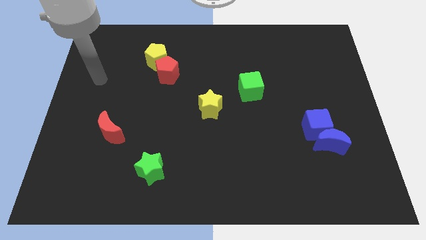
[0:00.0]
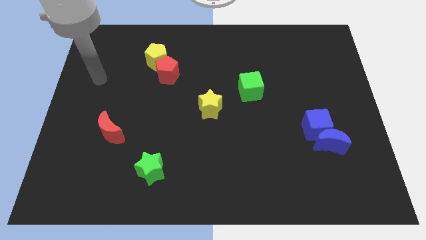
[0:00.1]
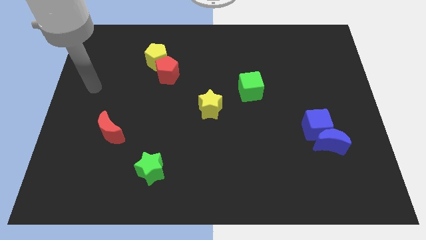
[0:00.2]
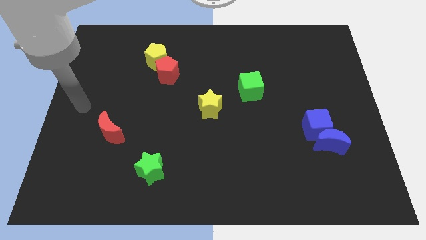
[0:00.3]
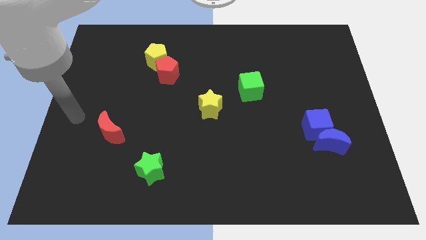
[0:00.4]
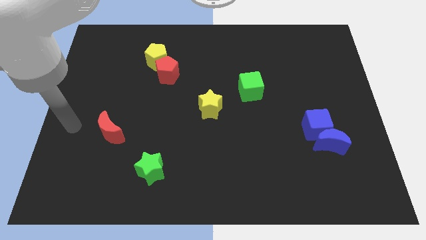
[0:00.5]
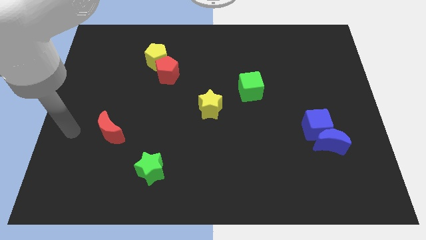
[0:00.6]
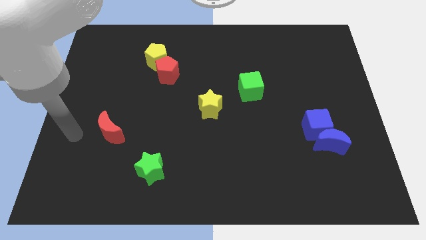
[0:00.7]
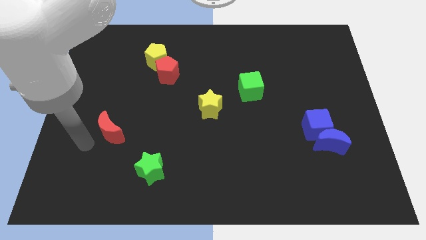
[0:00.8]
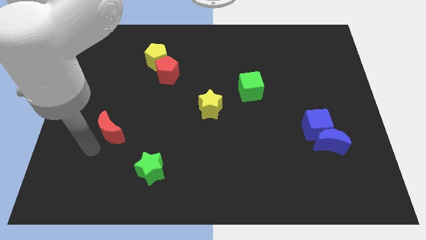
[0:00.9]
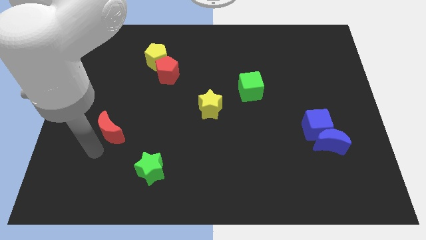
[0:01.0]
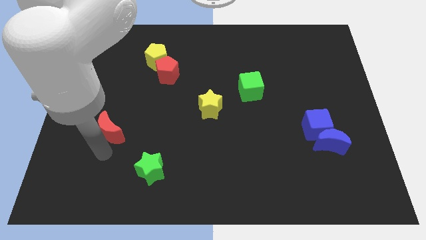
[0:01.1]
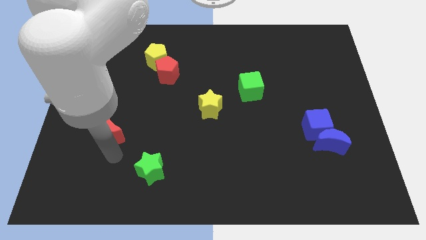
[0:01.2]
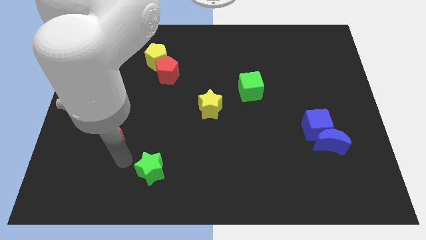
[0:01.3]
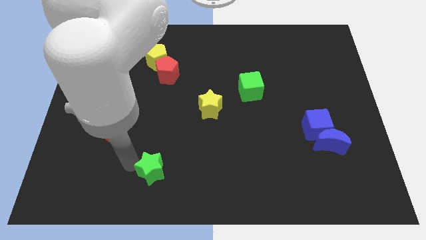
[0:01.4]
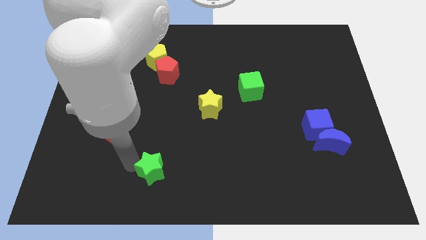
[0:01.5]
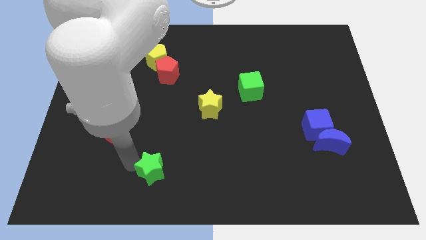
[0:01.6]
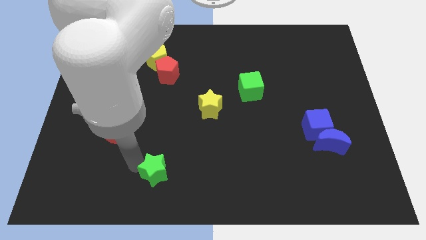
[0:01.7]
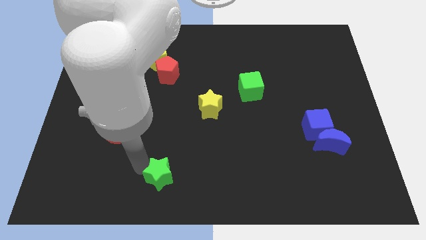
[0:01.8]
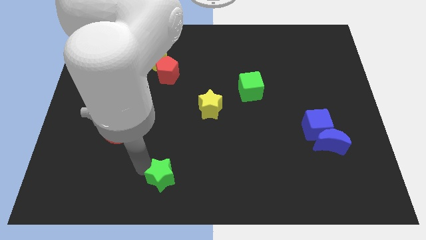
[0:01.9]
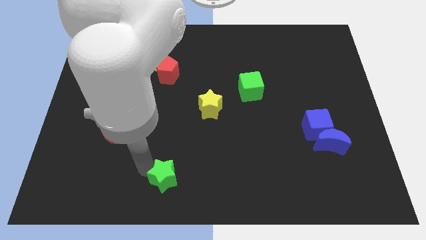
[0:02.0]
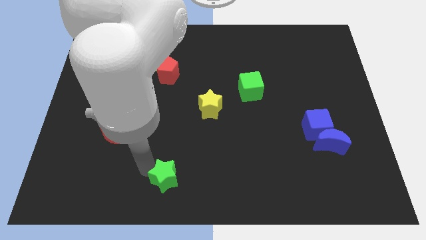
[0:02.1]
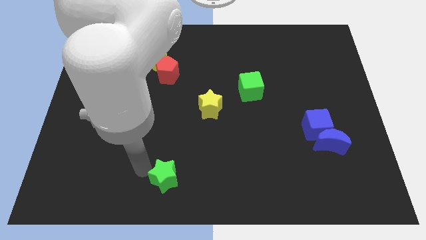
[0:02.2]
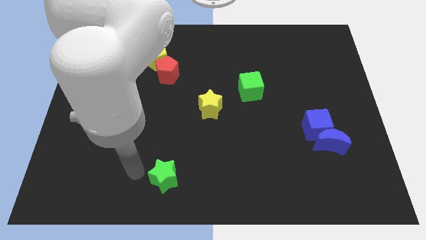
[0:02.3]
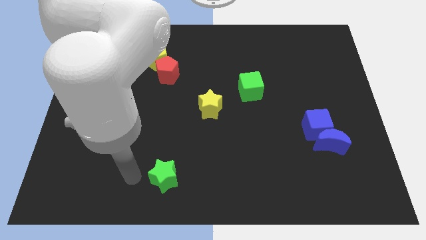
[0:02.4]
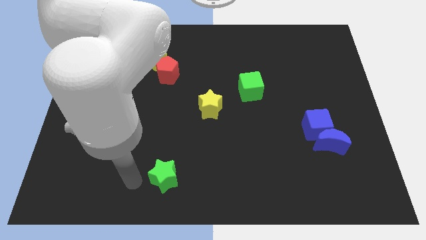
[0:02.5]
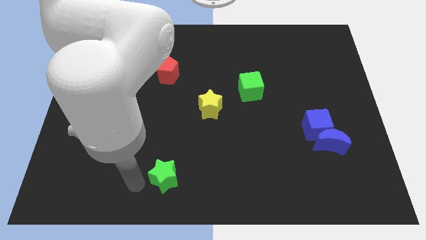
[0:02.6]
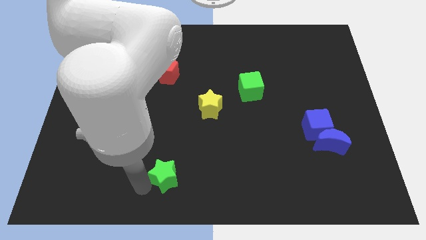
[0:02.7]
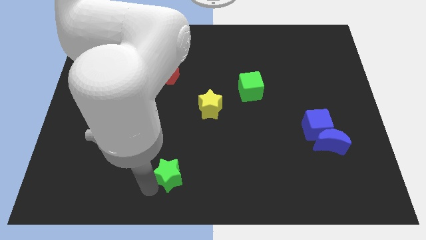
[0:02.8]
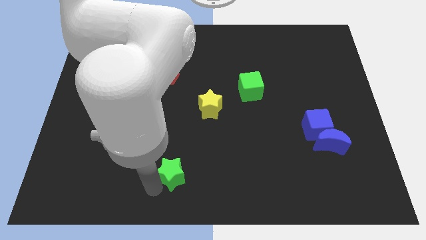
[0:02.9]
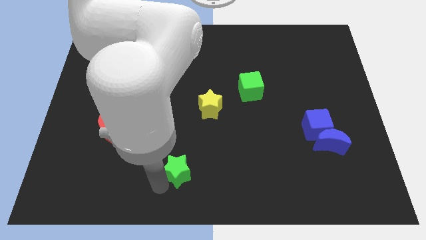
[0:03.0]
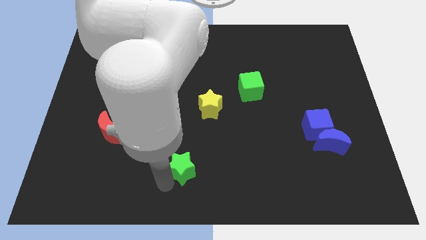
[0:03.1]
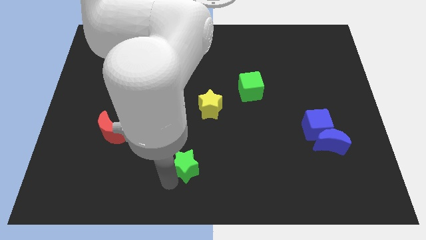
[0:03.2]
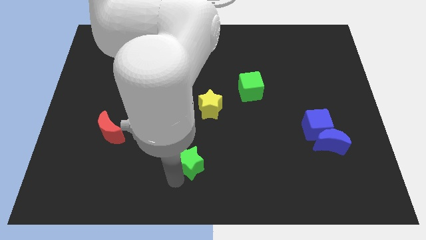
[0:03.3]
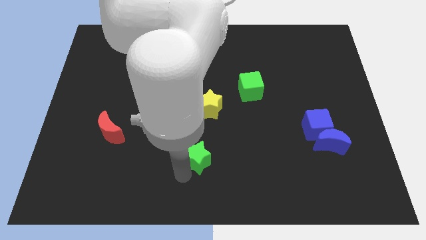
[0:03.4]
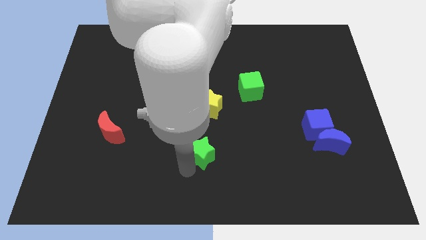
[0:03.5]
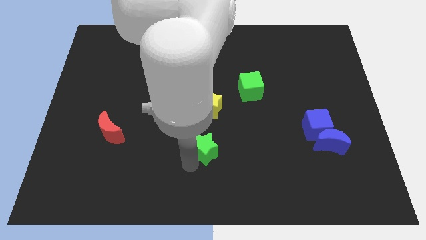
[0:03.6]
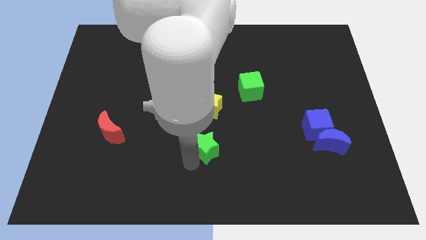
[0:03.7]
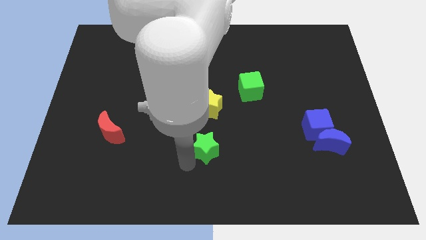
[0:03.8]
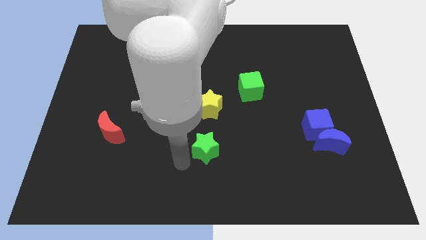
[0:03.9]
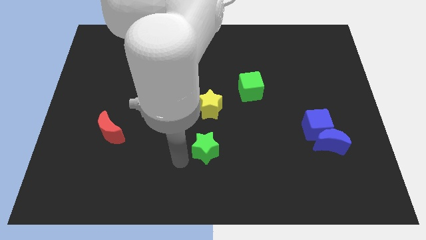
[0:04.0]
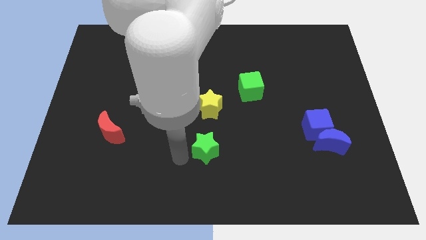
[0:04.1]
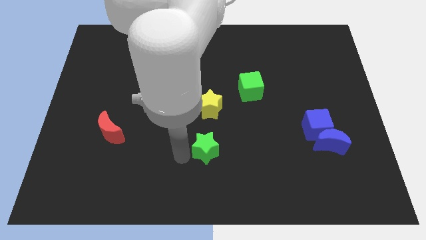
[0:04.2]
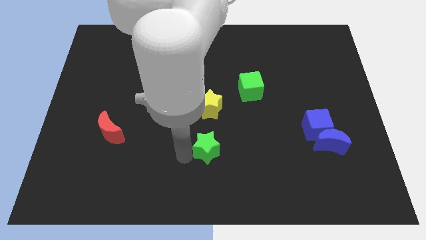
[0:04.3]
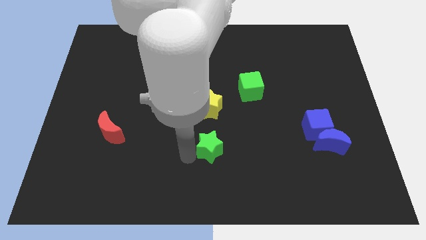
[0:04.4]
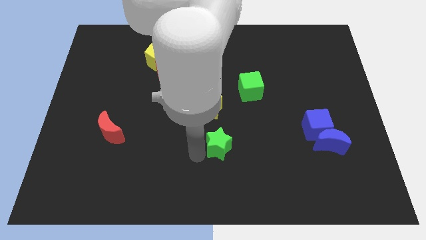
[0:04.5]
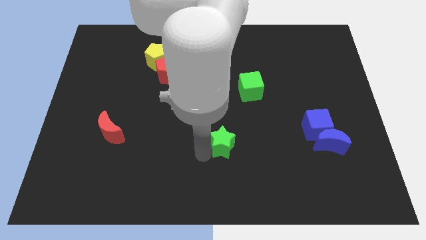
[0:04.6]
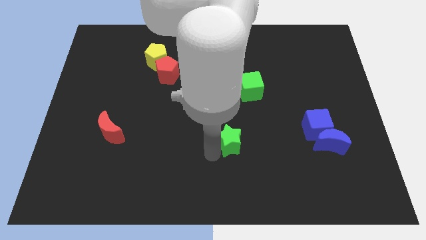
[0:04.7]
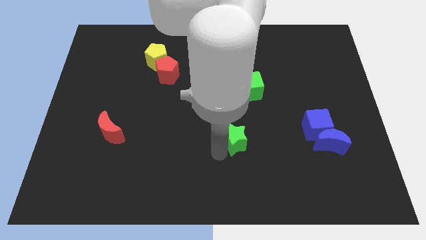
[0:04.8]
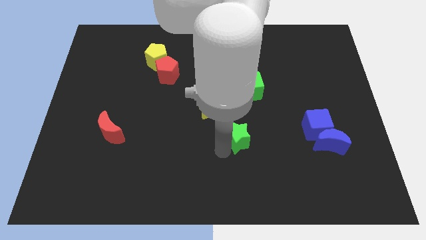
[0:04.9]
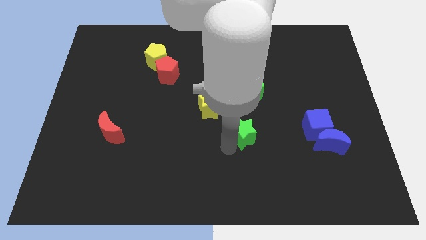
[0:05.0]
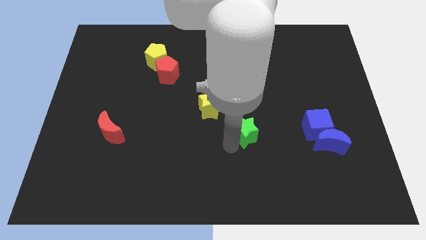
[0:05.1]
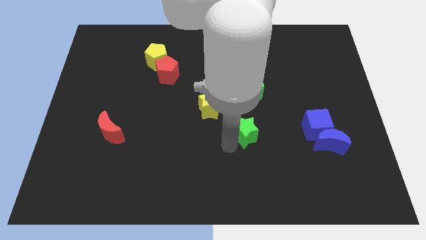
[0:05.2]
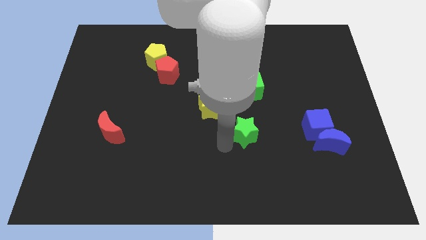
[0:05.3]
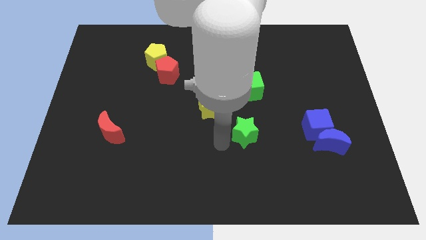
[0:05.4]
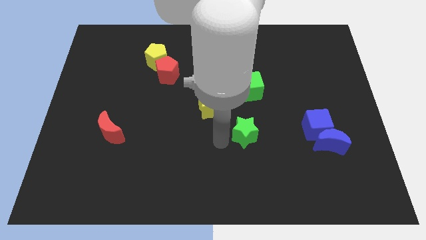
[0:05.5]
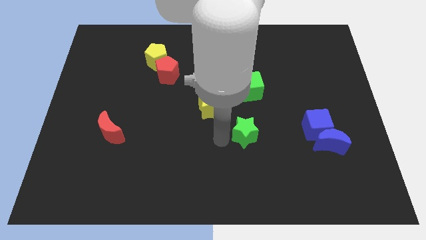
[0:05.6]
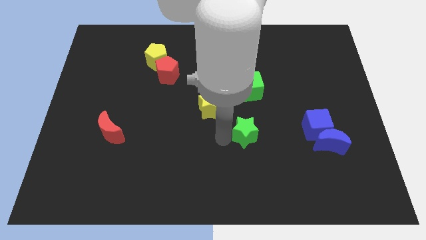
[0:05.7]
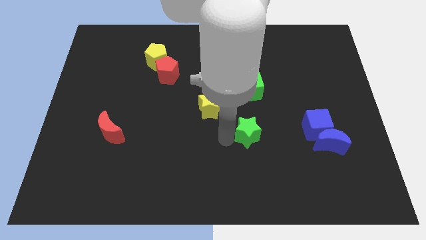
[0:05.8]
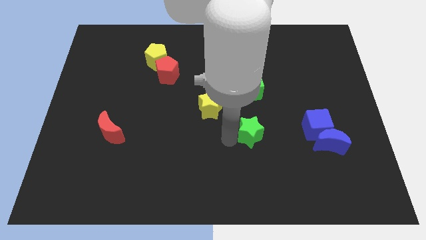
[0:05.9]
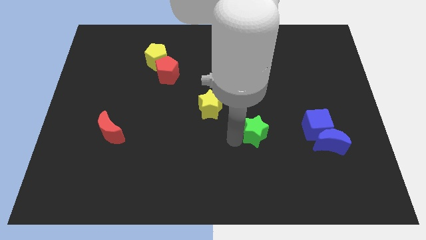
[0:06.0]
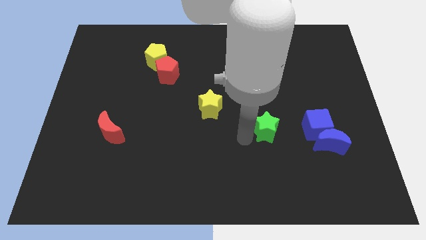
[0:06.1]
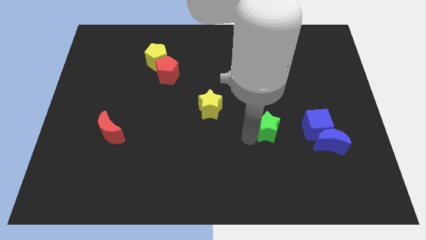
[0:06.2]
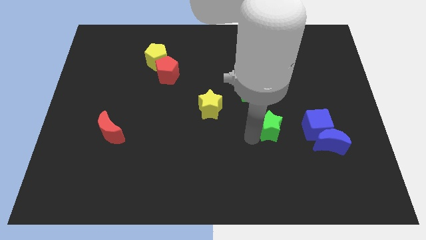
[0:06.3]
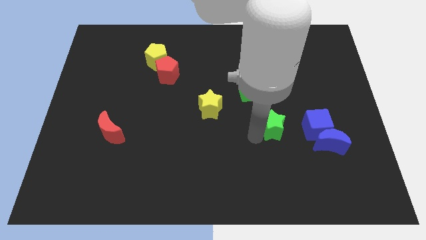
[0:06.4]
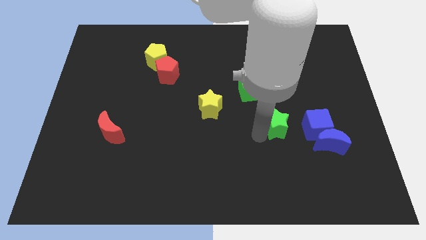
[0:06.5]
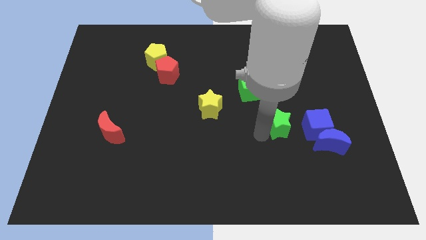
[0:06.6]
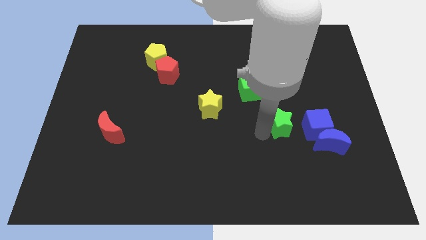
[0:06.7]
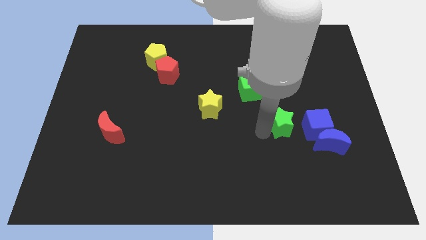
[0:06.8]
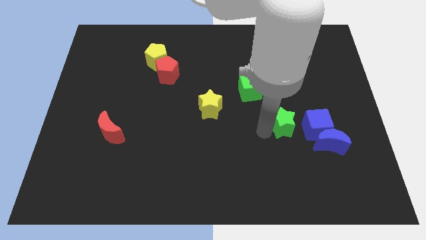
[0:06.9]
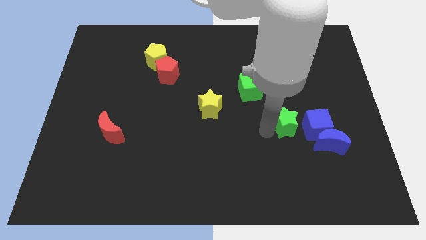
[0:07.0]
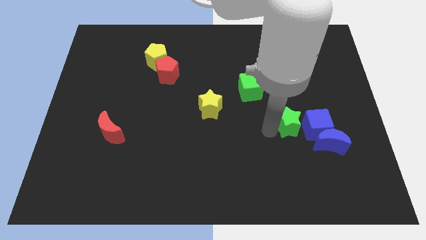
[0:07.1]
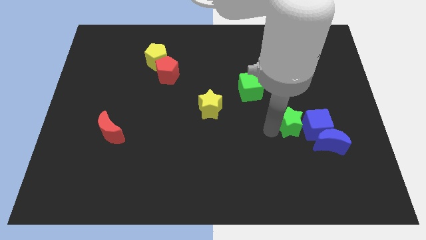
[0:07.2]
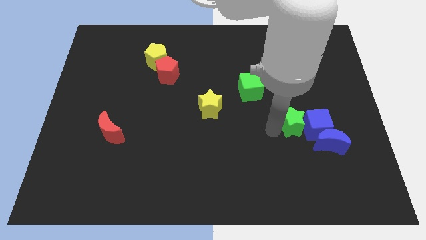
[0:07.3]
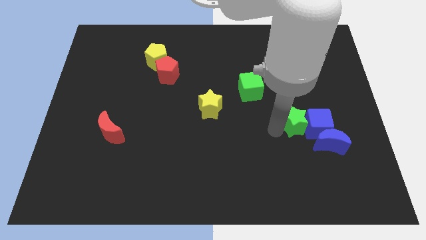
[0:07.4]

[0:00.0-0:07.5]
put the green star close to the blue cube

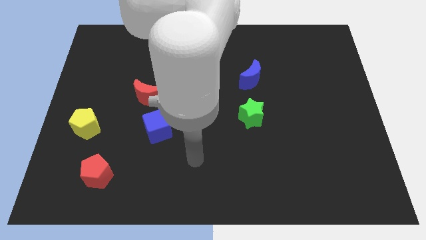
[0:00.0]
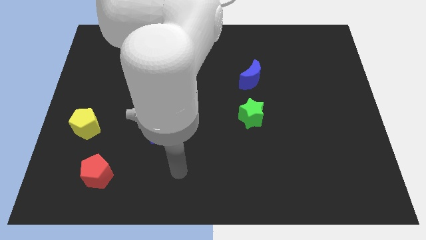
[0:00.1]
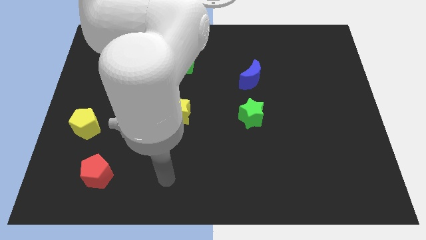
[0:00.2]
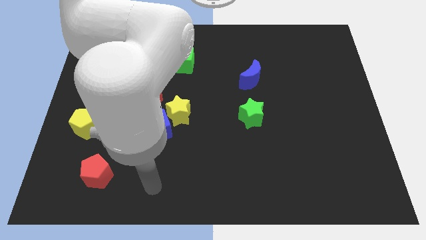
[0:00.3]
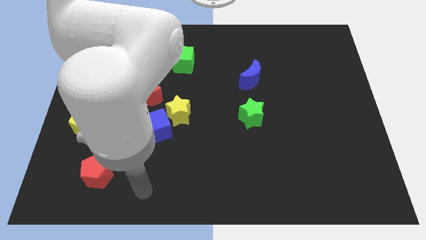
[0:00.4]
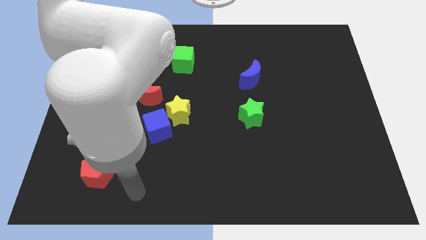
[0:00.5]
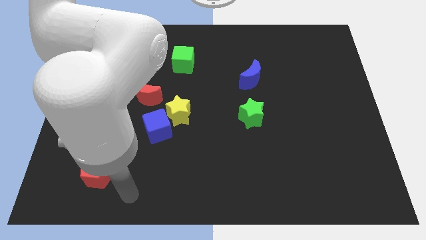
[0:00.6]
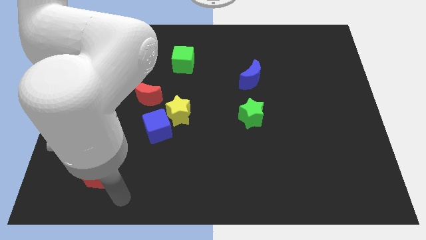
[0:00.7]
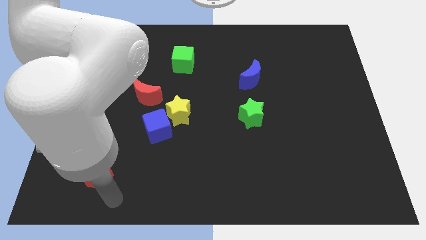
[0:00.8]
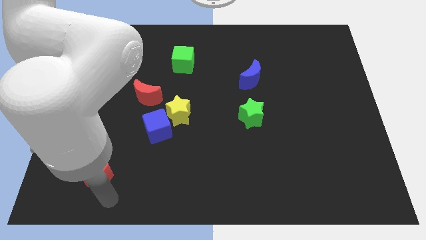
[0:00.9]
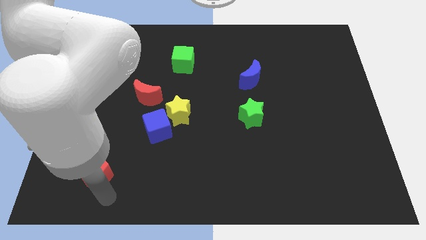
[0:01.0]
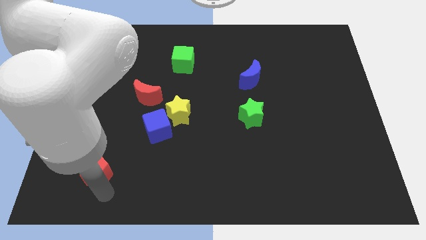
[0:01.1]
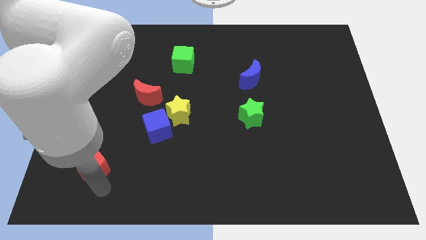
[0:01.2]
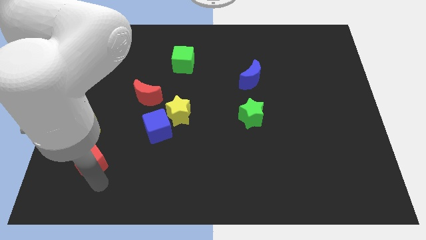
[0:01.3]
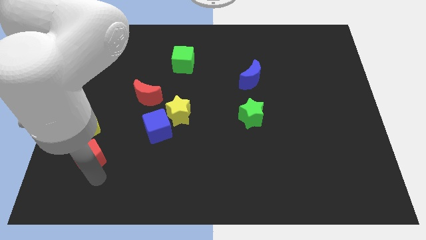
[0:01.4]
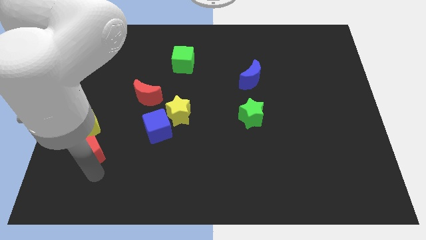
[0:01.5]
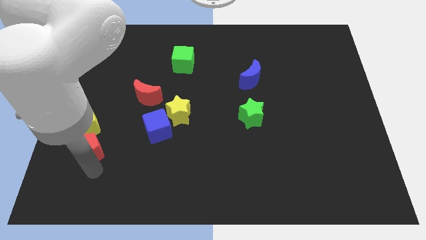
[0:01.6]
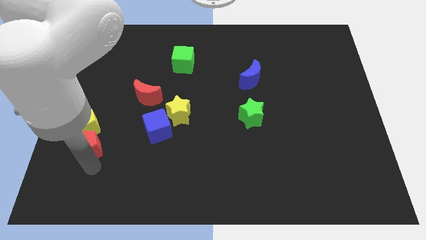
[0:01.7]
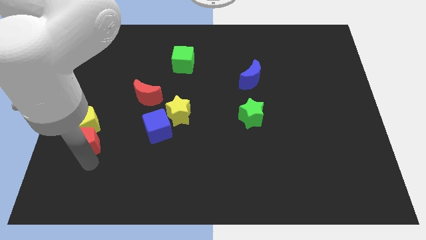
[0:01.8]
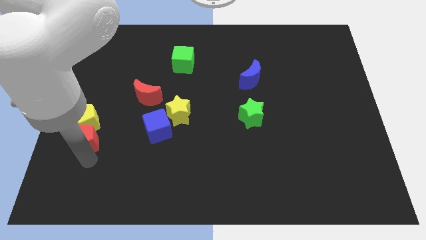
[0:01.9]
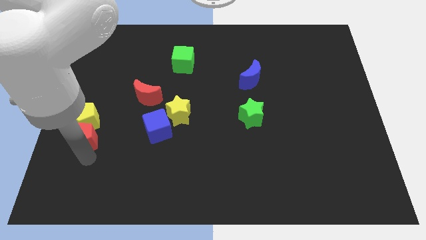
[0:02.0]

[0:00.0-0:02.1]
move the red pentagon close to the yellow pentagon
